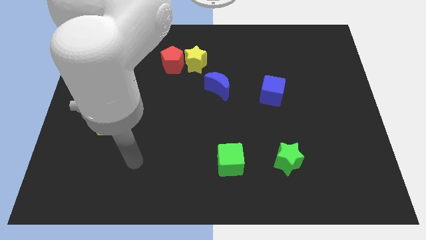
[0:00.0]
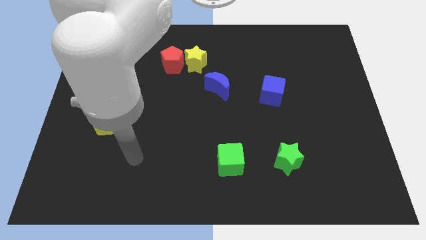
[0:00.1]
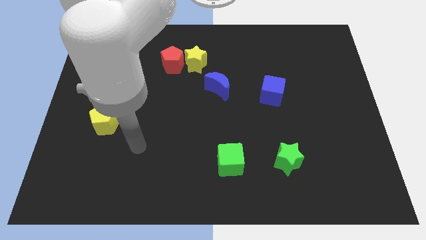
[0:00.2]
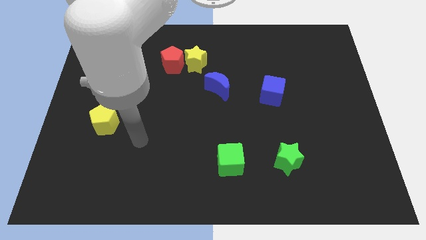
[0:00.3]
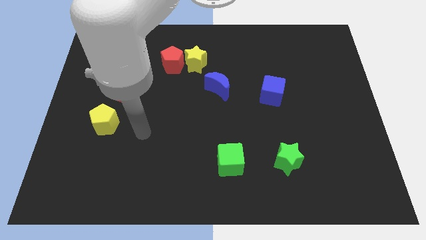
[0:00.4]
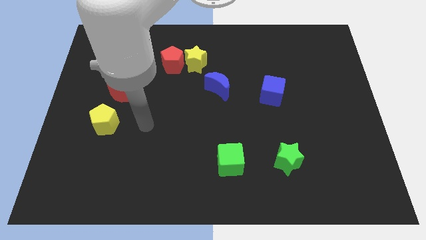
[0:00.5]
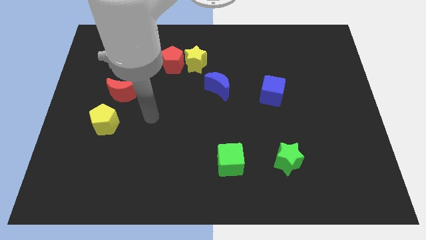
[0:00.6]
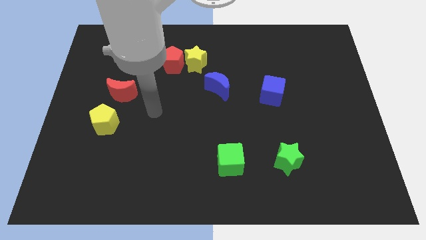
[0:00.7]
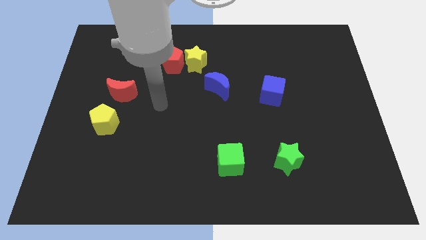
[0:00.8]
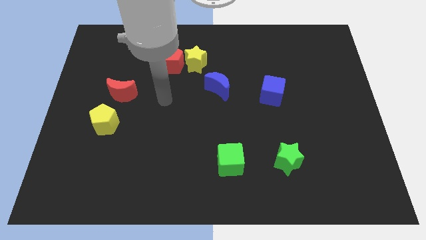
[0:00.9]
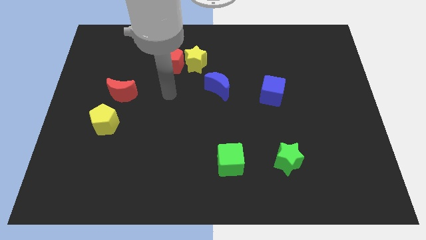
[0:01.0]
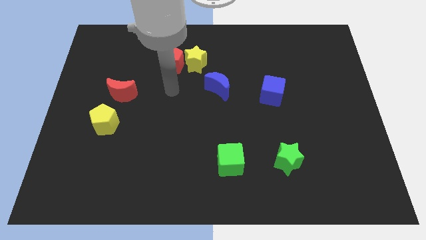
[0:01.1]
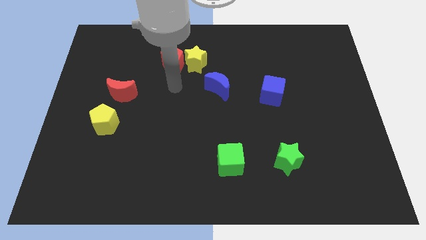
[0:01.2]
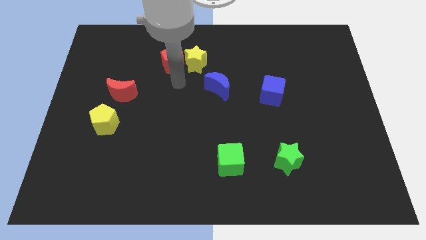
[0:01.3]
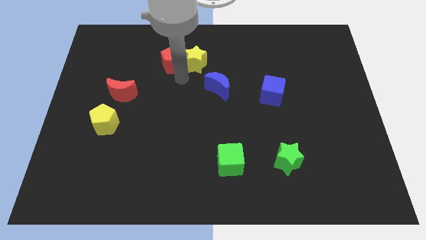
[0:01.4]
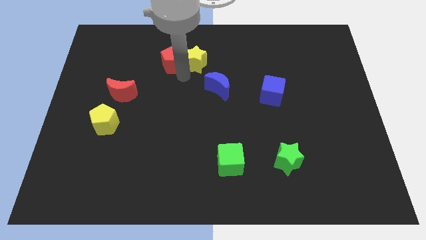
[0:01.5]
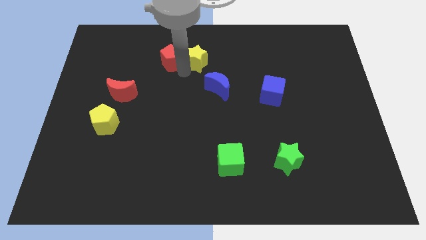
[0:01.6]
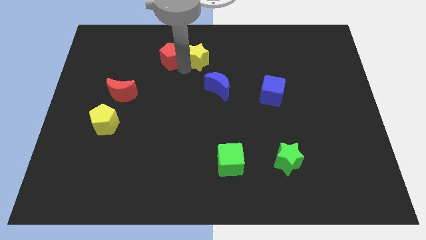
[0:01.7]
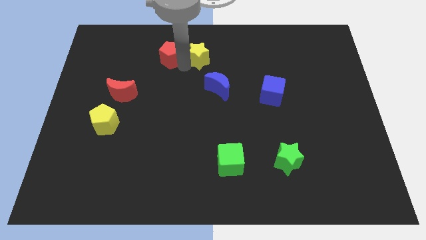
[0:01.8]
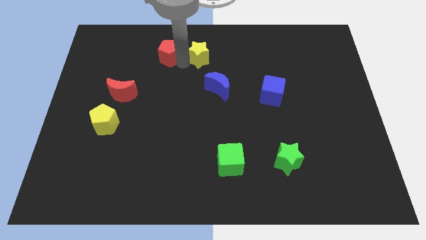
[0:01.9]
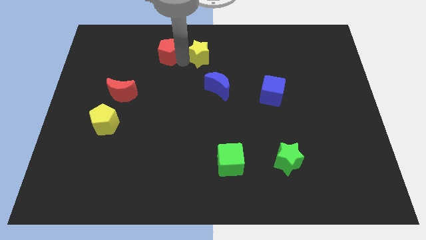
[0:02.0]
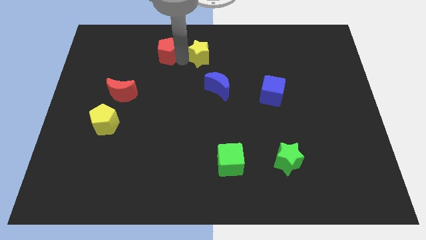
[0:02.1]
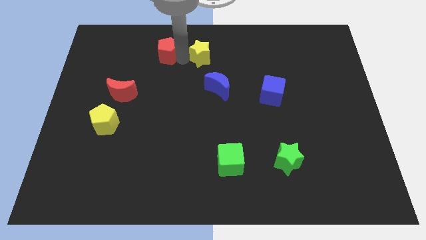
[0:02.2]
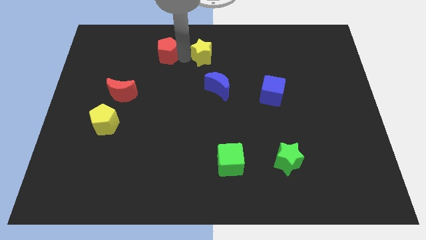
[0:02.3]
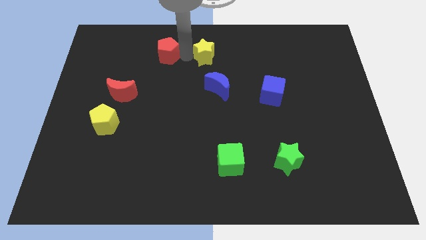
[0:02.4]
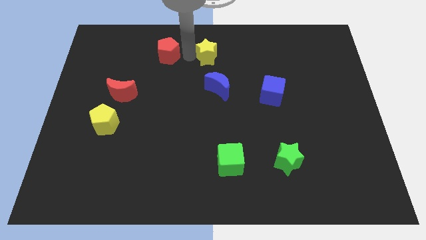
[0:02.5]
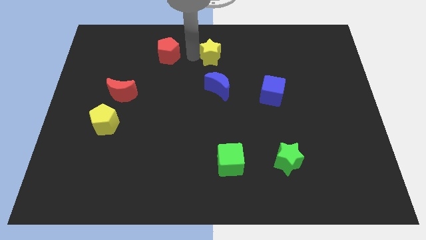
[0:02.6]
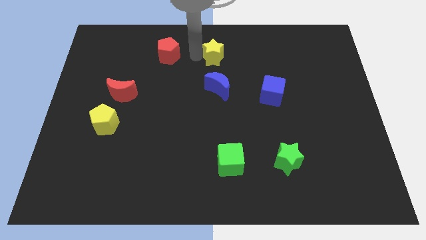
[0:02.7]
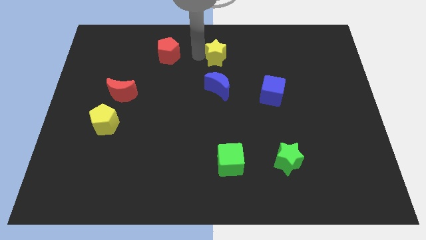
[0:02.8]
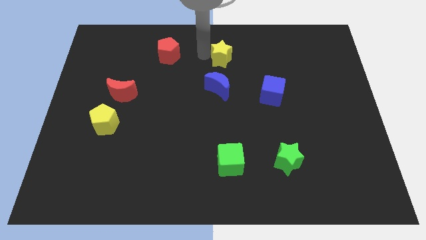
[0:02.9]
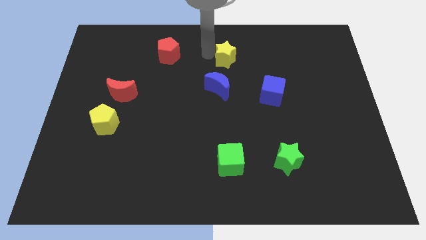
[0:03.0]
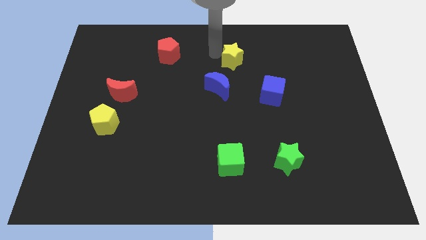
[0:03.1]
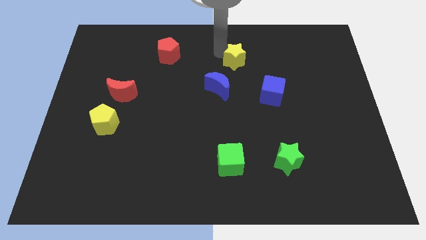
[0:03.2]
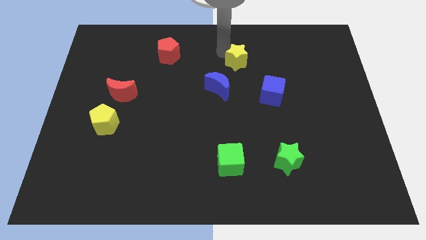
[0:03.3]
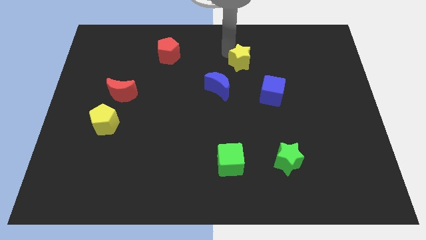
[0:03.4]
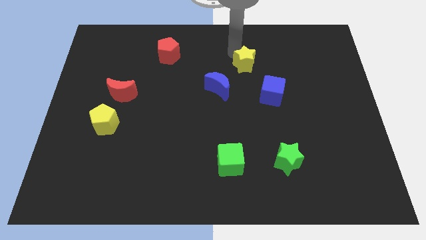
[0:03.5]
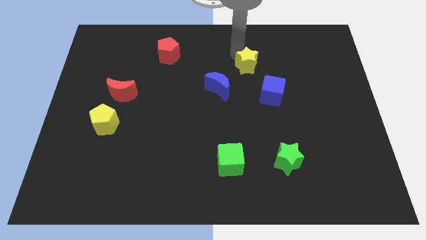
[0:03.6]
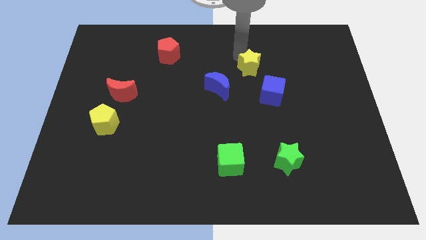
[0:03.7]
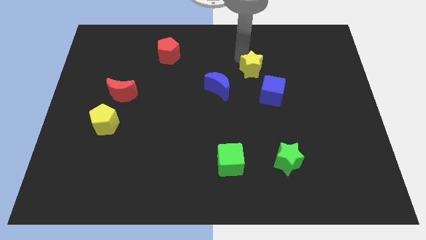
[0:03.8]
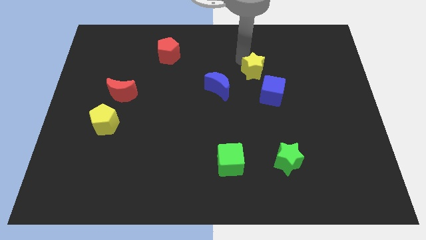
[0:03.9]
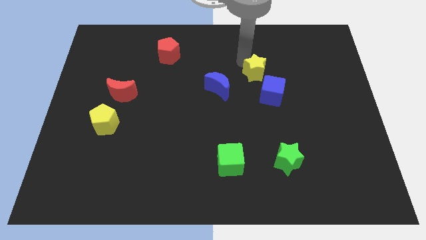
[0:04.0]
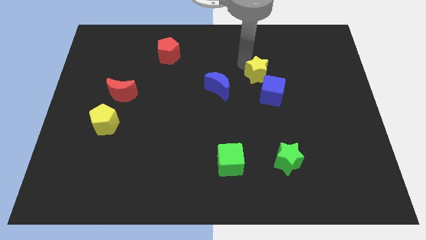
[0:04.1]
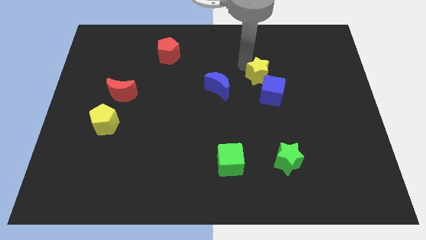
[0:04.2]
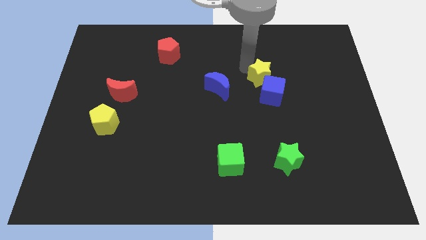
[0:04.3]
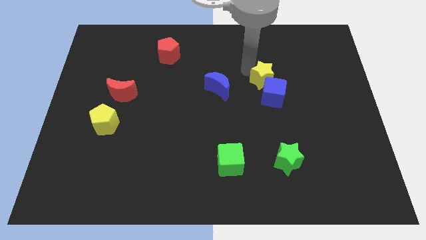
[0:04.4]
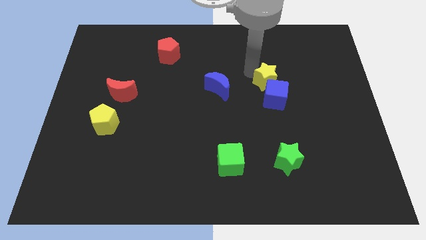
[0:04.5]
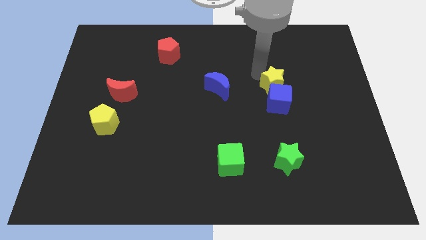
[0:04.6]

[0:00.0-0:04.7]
slide the yellow star towards the blue cube

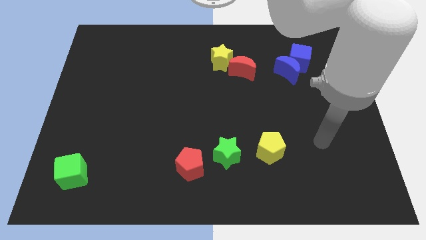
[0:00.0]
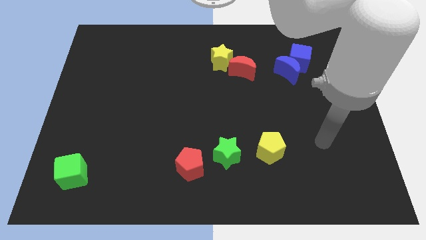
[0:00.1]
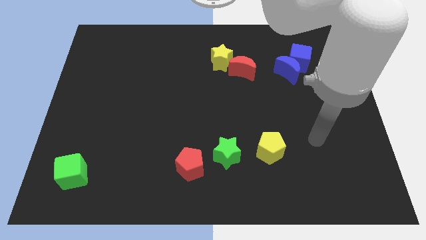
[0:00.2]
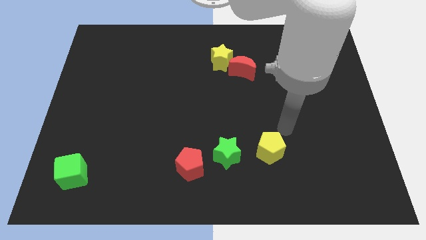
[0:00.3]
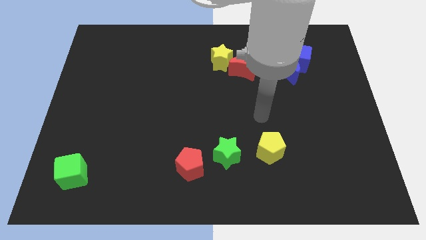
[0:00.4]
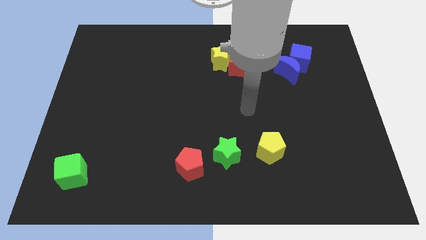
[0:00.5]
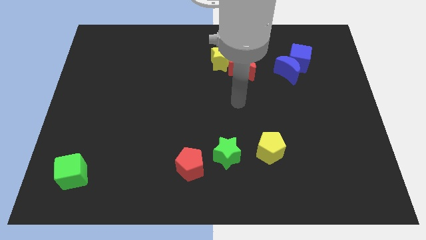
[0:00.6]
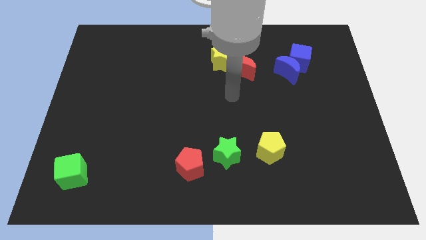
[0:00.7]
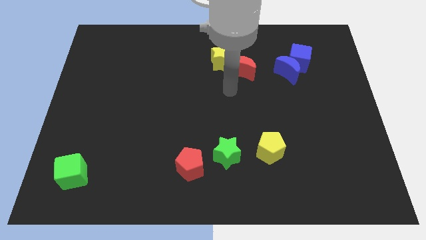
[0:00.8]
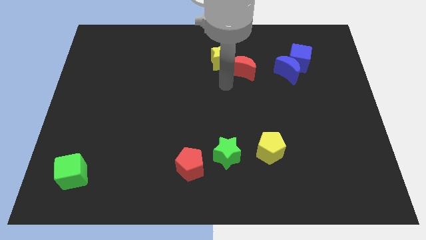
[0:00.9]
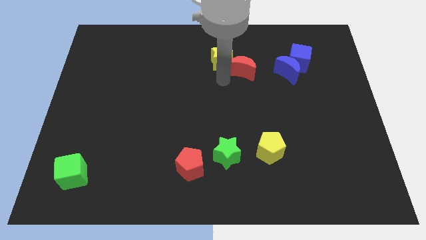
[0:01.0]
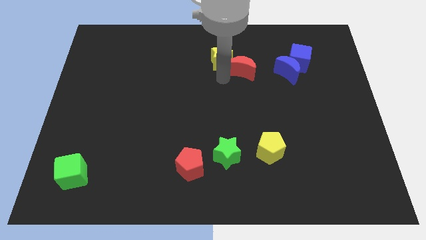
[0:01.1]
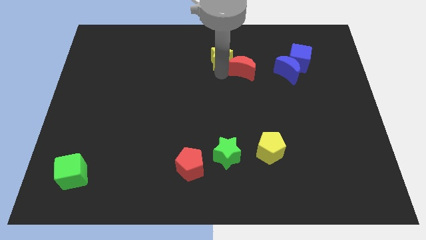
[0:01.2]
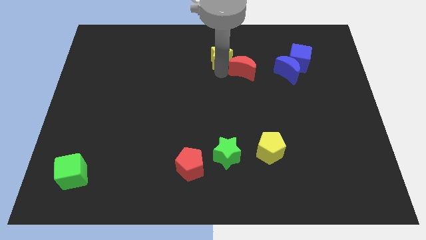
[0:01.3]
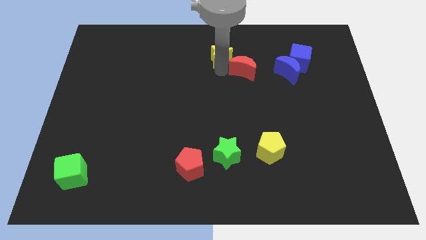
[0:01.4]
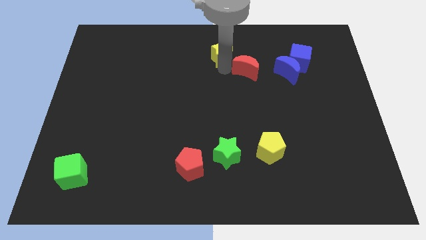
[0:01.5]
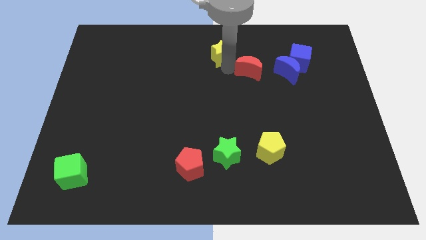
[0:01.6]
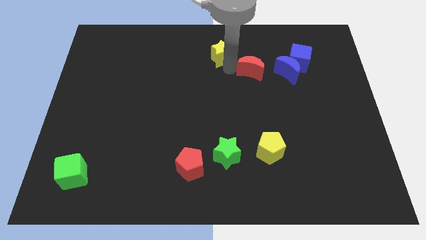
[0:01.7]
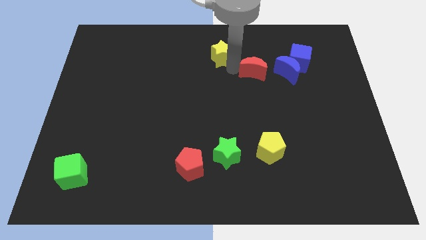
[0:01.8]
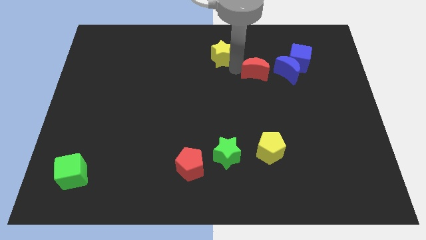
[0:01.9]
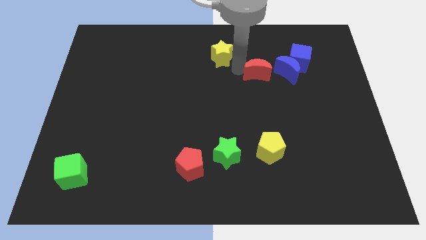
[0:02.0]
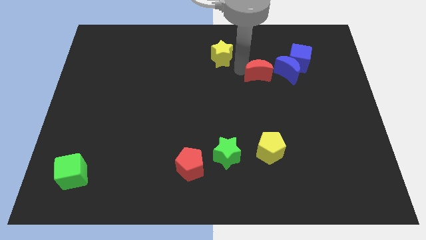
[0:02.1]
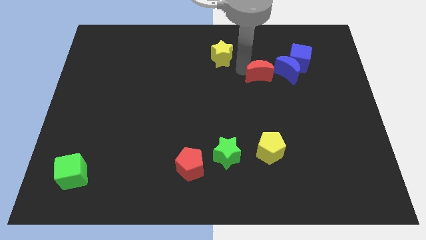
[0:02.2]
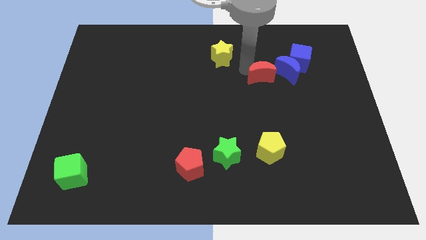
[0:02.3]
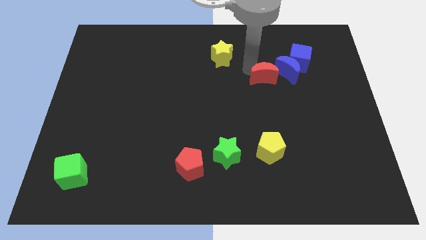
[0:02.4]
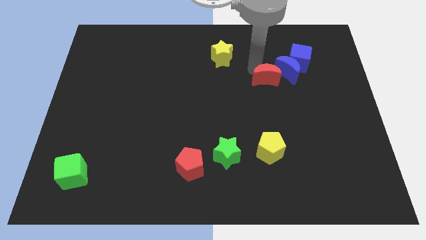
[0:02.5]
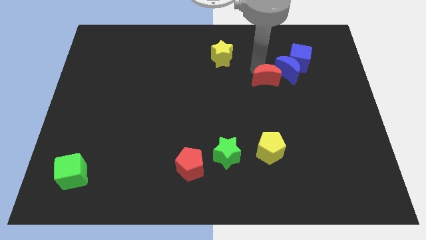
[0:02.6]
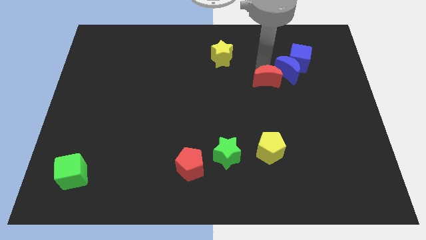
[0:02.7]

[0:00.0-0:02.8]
slide the red moon next to the blue moon
